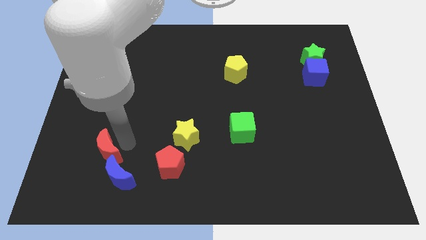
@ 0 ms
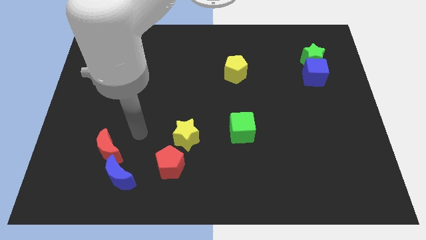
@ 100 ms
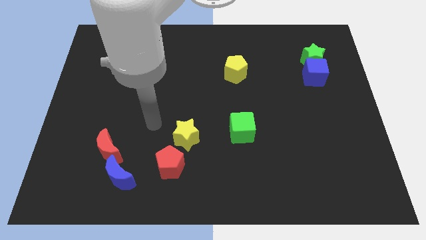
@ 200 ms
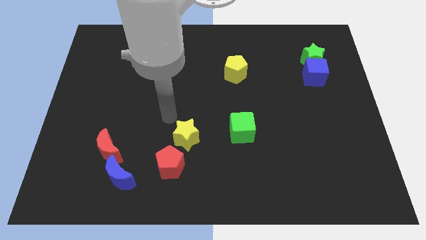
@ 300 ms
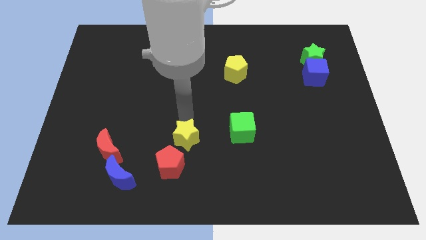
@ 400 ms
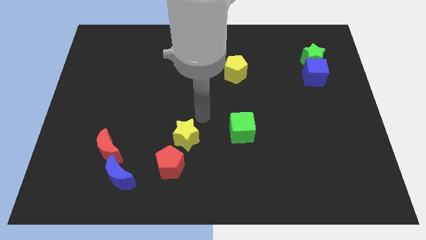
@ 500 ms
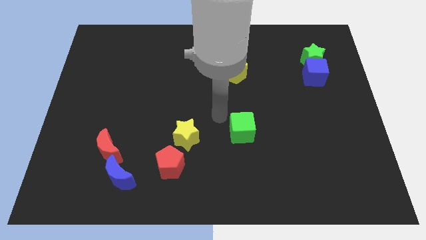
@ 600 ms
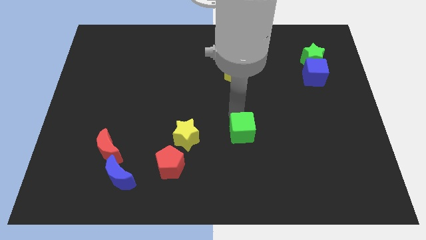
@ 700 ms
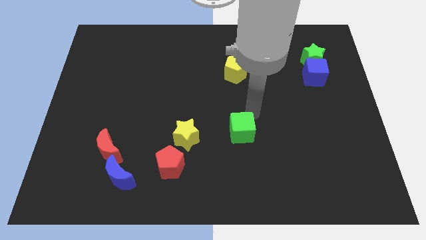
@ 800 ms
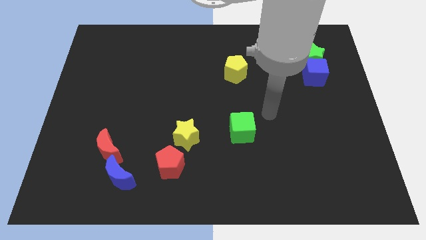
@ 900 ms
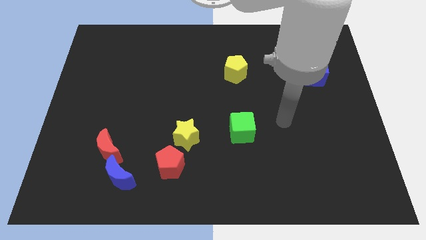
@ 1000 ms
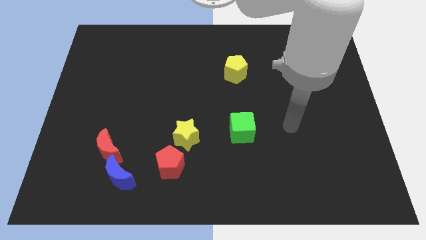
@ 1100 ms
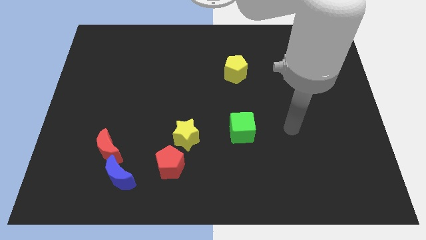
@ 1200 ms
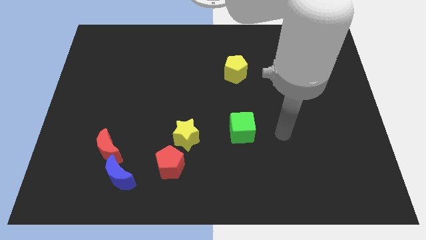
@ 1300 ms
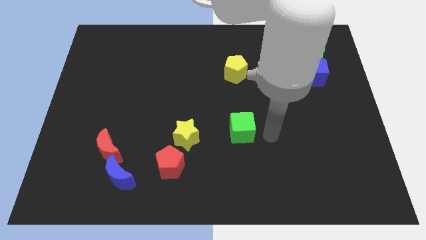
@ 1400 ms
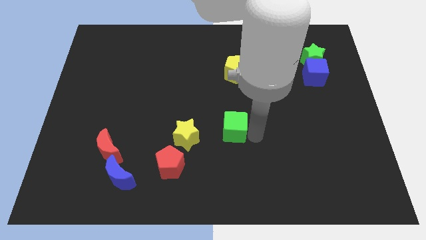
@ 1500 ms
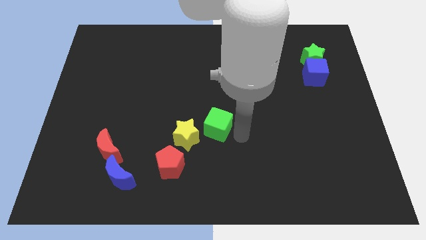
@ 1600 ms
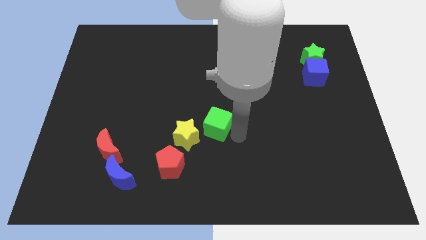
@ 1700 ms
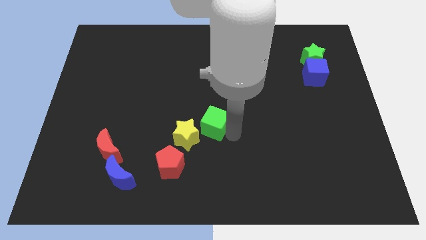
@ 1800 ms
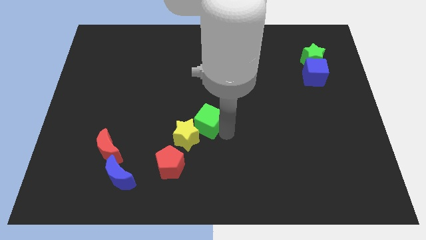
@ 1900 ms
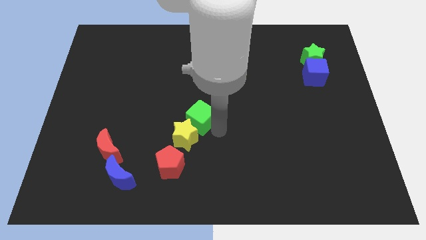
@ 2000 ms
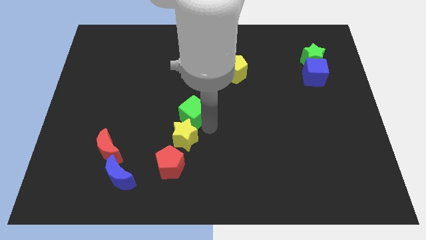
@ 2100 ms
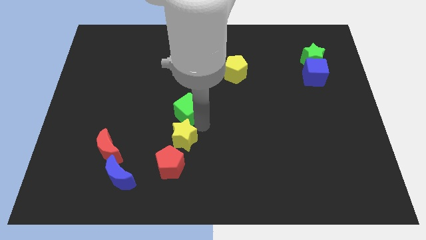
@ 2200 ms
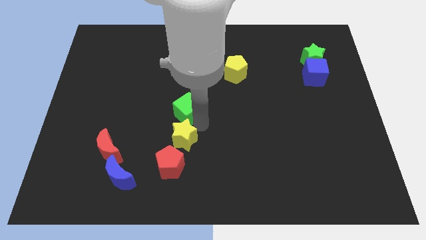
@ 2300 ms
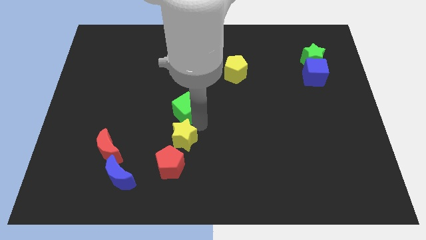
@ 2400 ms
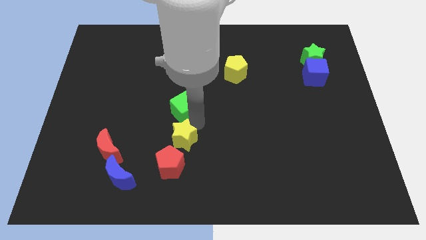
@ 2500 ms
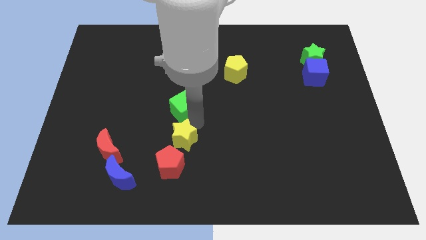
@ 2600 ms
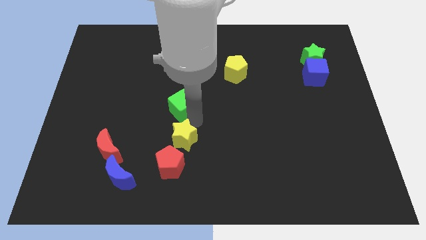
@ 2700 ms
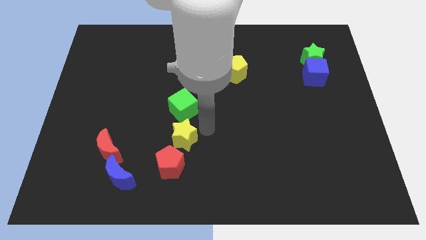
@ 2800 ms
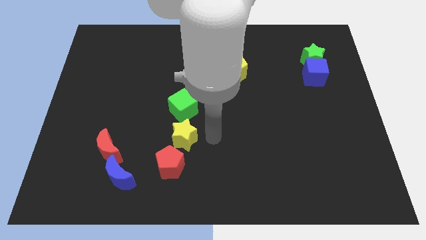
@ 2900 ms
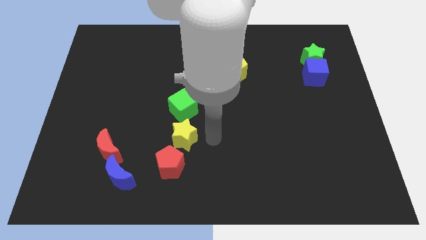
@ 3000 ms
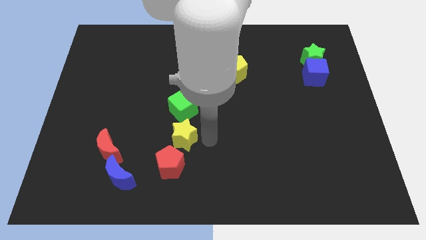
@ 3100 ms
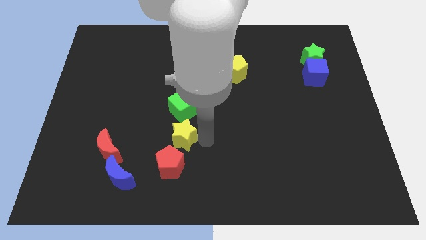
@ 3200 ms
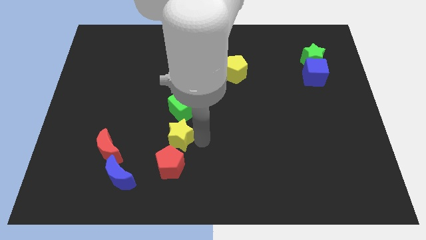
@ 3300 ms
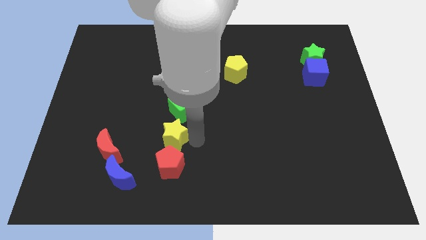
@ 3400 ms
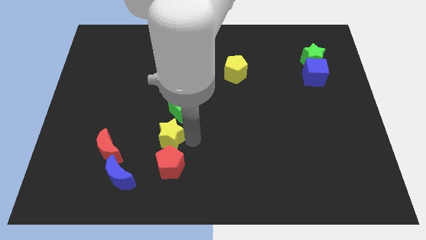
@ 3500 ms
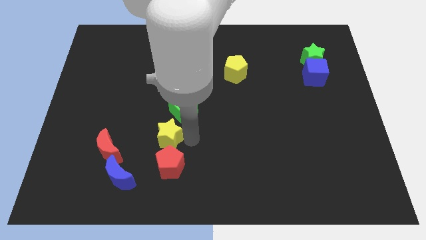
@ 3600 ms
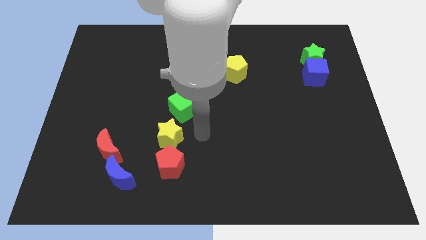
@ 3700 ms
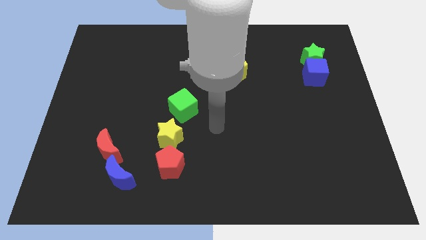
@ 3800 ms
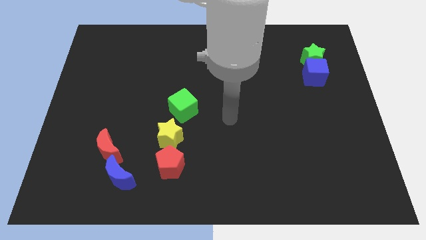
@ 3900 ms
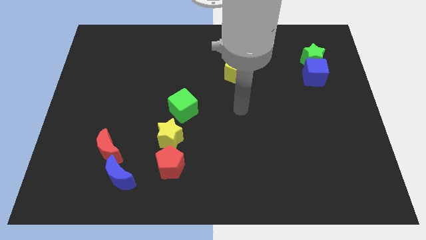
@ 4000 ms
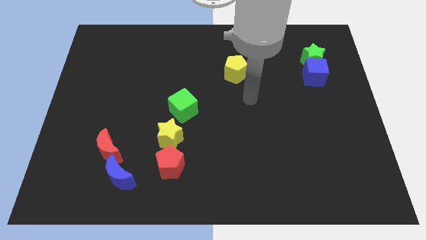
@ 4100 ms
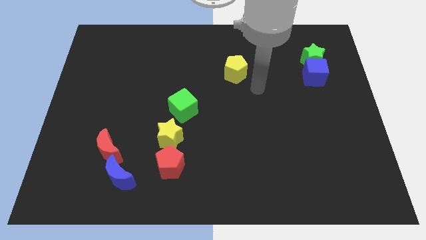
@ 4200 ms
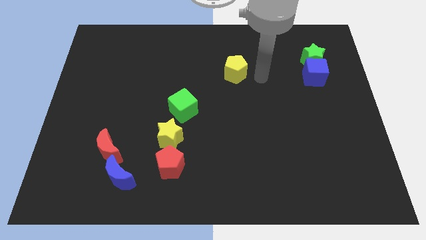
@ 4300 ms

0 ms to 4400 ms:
place the green cube above the yellow star

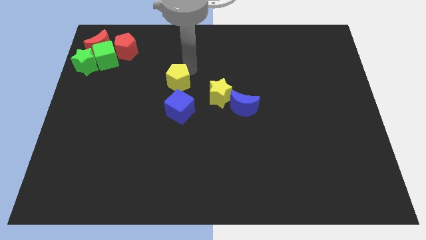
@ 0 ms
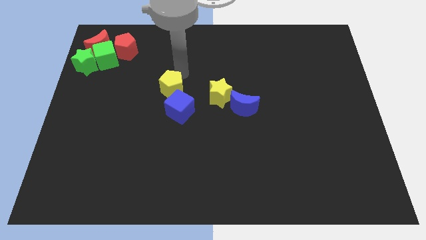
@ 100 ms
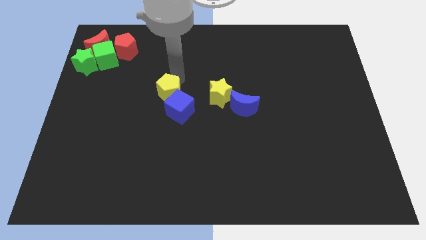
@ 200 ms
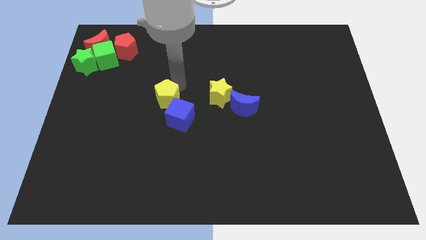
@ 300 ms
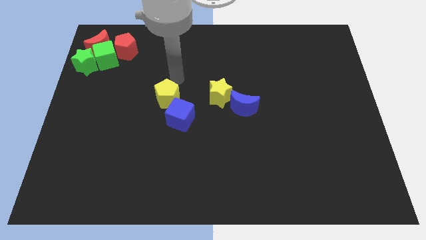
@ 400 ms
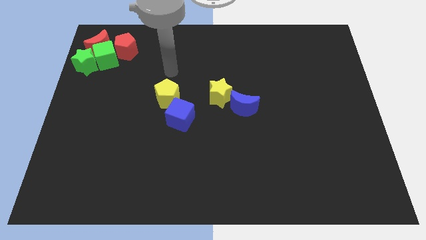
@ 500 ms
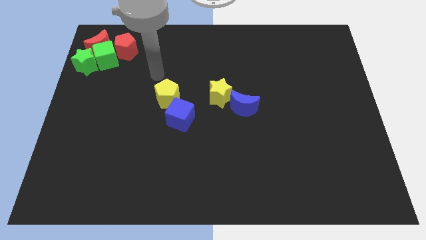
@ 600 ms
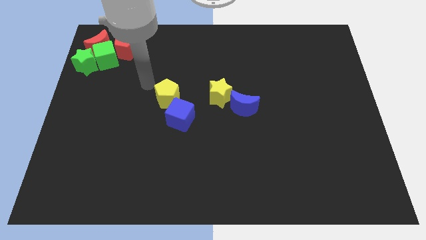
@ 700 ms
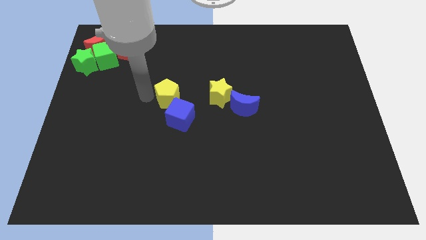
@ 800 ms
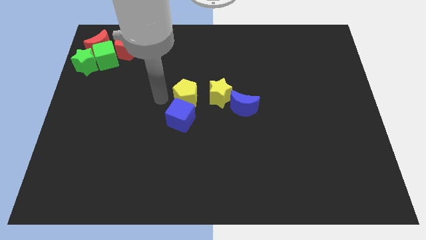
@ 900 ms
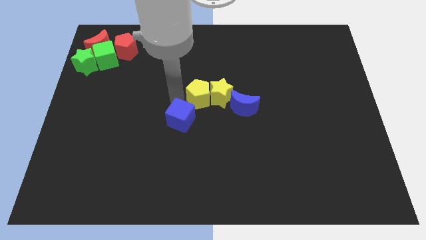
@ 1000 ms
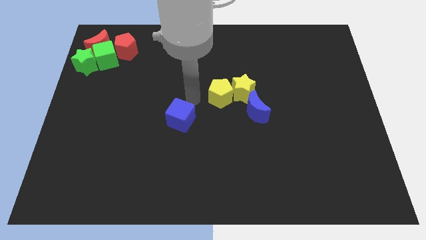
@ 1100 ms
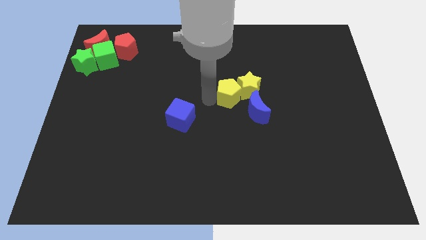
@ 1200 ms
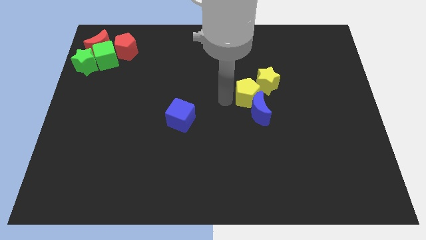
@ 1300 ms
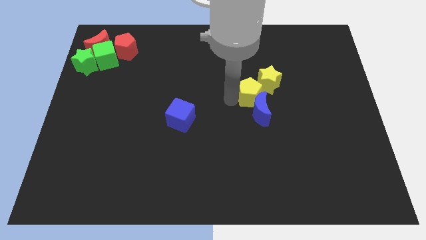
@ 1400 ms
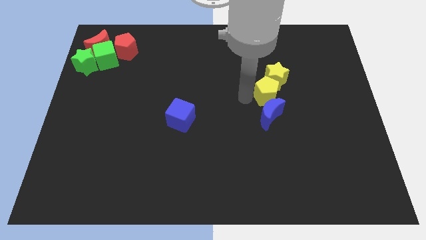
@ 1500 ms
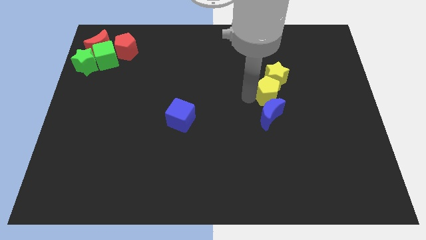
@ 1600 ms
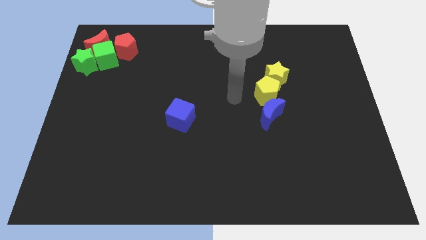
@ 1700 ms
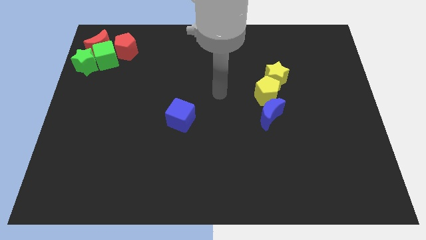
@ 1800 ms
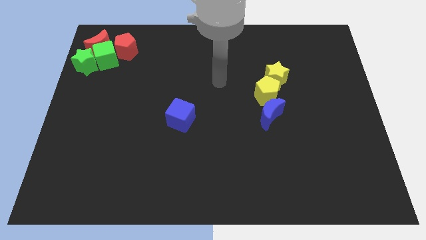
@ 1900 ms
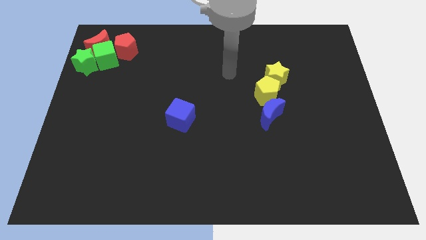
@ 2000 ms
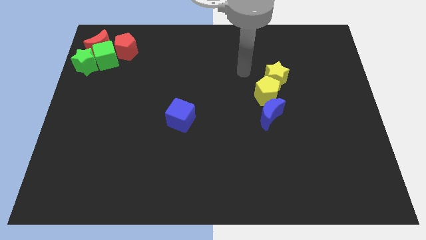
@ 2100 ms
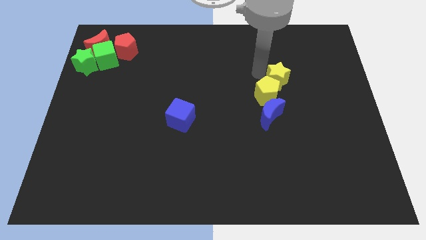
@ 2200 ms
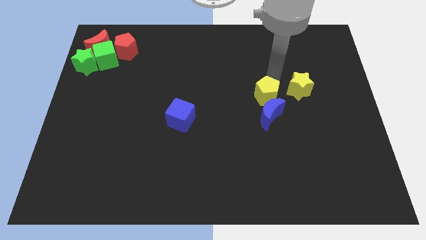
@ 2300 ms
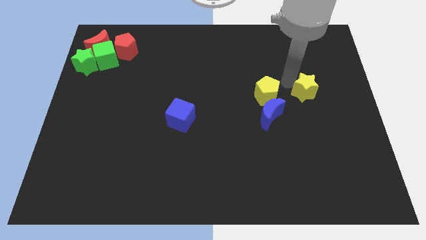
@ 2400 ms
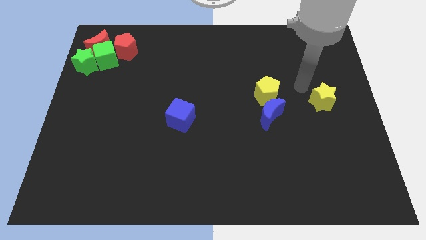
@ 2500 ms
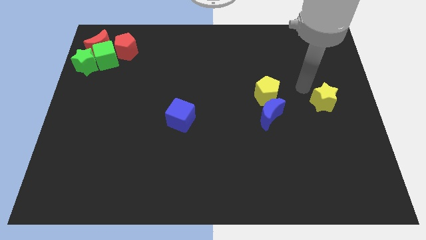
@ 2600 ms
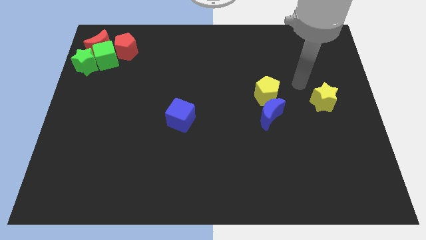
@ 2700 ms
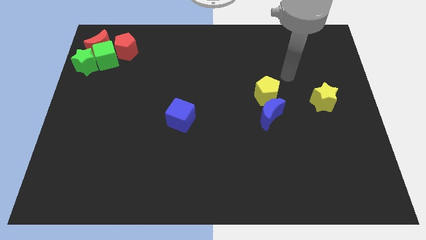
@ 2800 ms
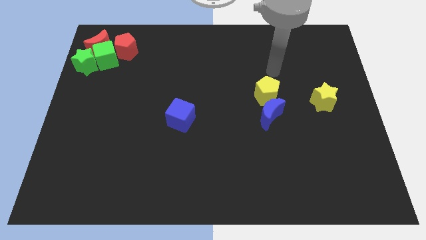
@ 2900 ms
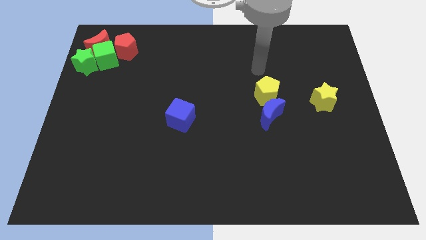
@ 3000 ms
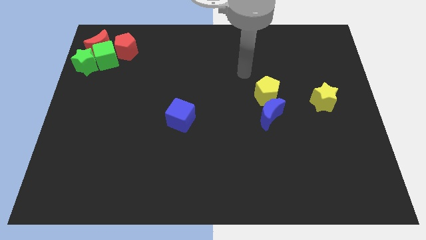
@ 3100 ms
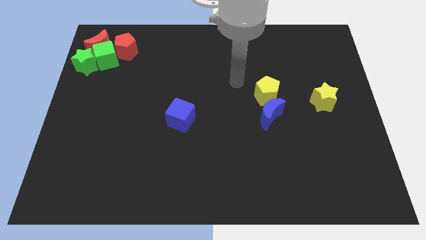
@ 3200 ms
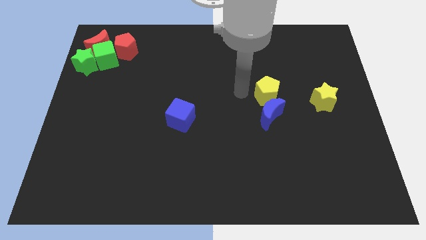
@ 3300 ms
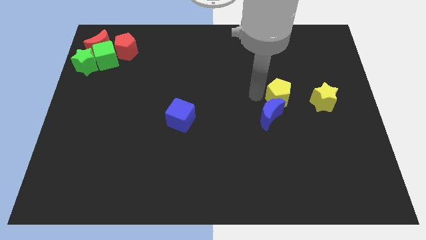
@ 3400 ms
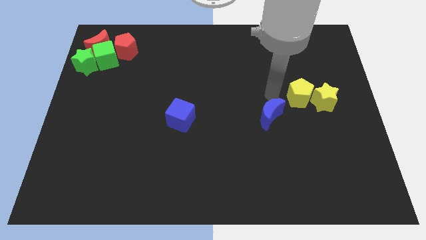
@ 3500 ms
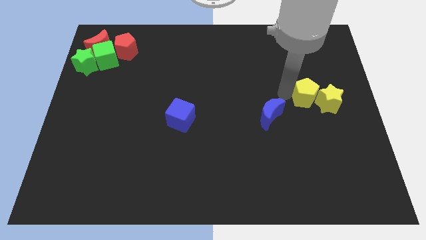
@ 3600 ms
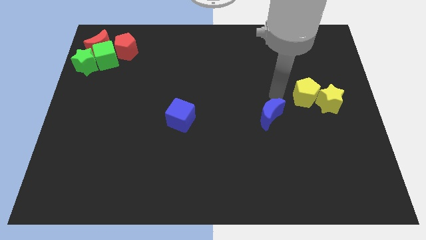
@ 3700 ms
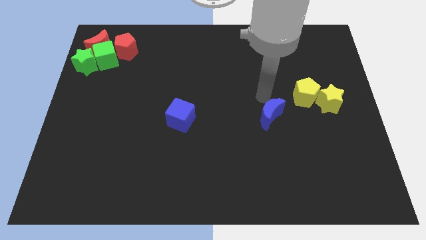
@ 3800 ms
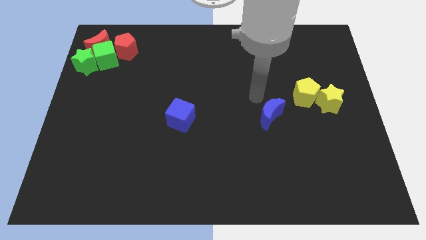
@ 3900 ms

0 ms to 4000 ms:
place the yellow pentagon along with yellow star towards center left side

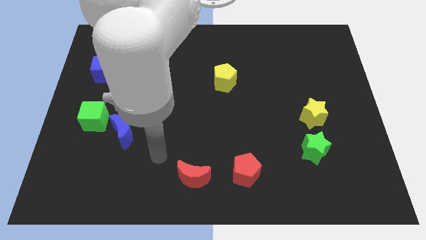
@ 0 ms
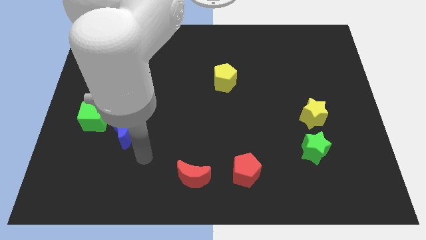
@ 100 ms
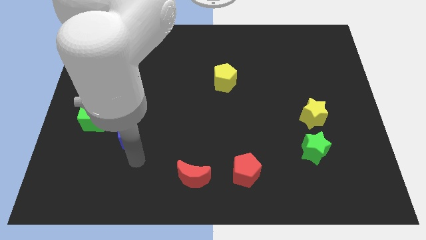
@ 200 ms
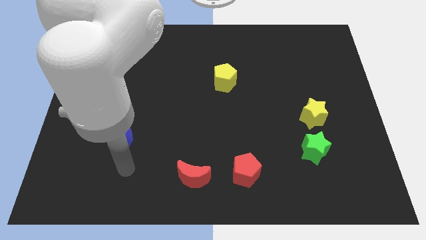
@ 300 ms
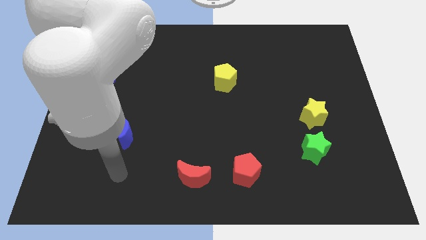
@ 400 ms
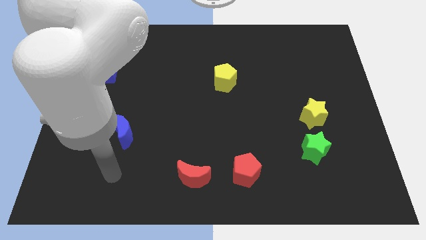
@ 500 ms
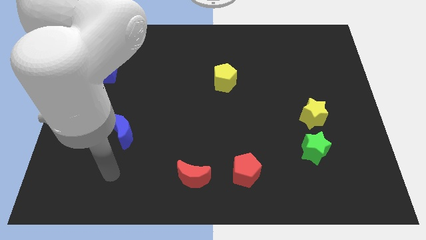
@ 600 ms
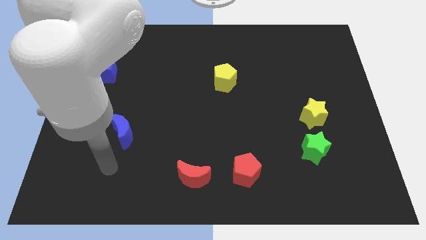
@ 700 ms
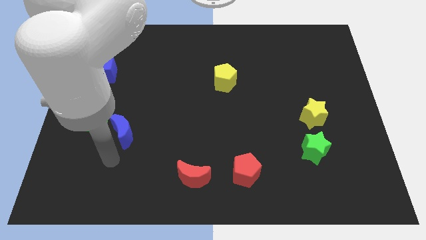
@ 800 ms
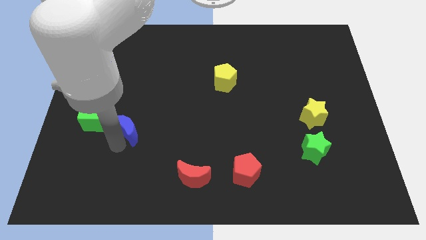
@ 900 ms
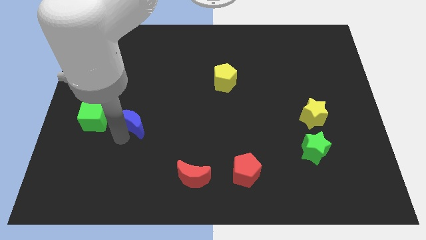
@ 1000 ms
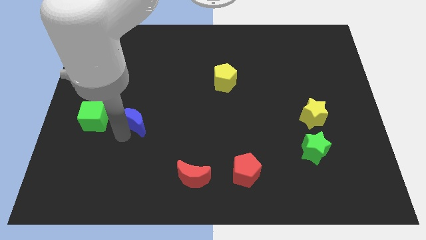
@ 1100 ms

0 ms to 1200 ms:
move the blue crescent to the right of the green cube
